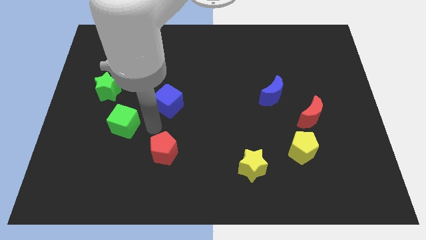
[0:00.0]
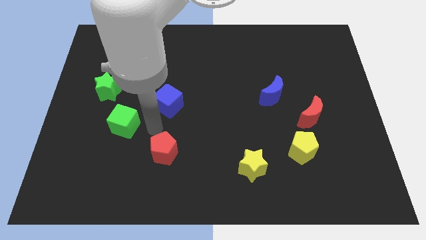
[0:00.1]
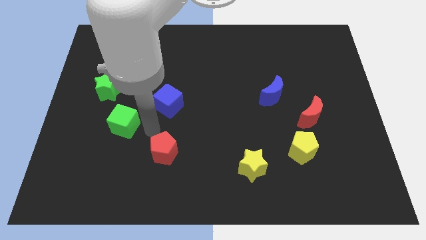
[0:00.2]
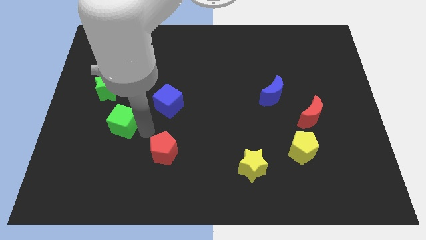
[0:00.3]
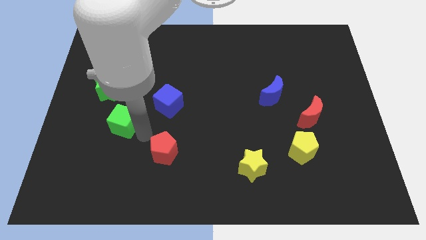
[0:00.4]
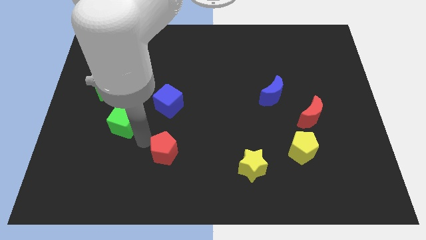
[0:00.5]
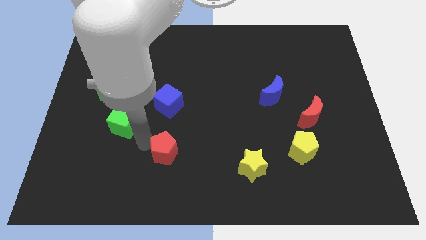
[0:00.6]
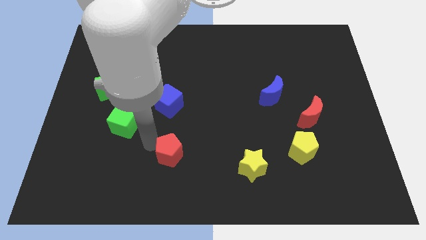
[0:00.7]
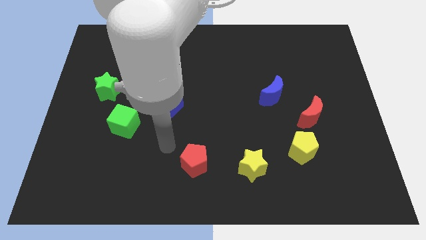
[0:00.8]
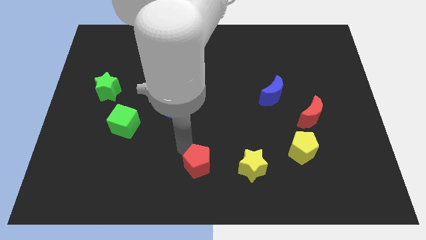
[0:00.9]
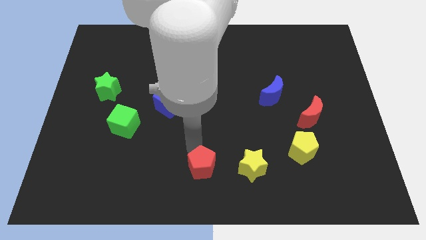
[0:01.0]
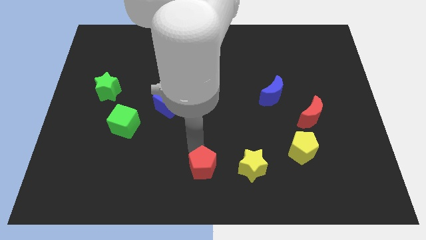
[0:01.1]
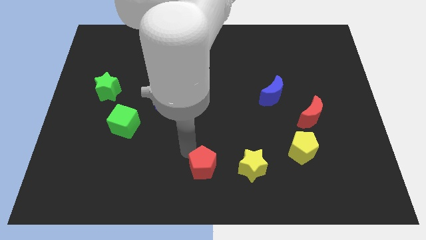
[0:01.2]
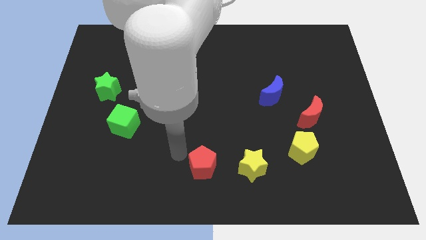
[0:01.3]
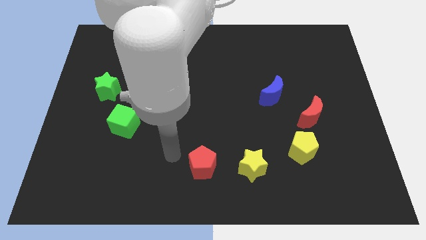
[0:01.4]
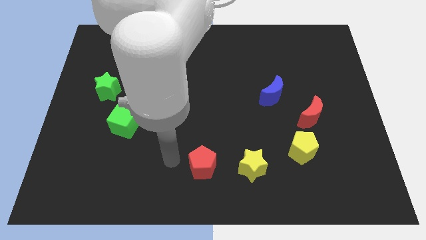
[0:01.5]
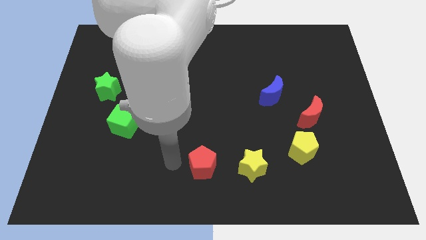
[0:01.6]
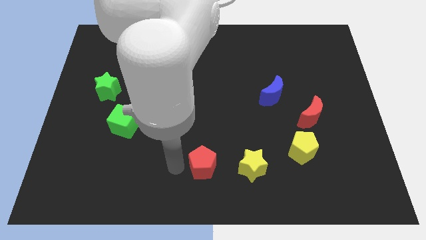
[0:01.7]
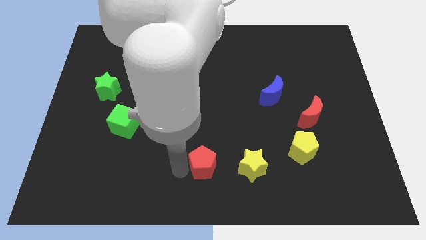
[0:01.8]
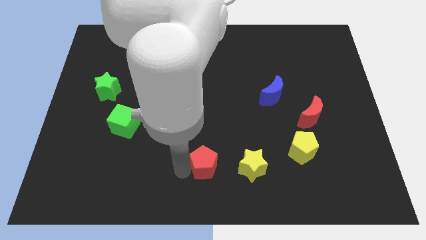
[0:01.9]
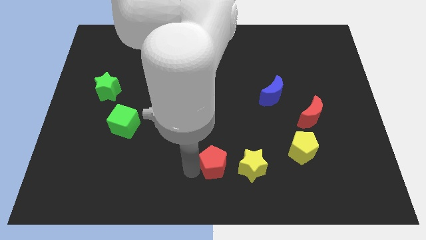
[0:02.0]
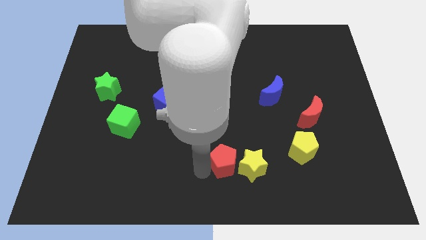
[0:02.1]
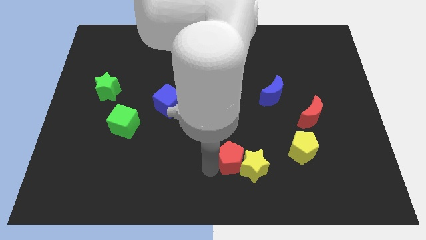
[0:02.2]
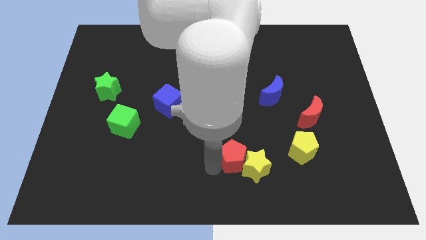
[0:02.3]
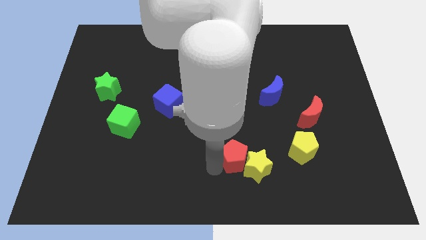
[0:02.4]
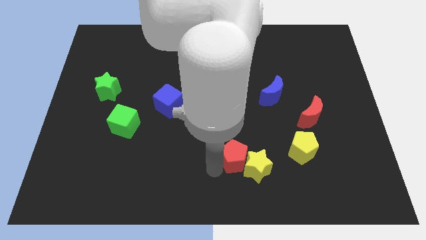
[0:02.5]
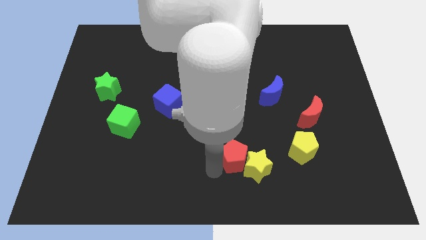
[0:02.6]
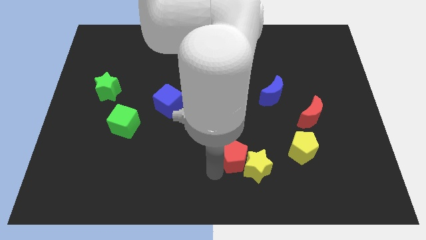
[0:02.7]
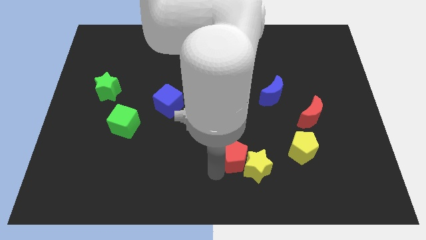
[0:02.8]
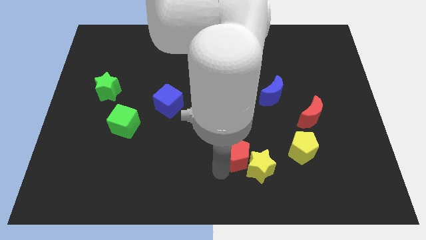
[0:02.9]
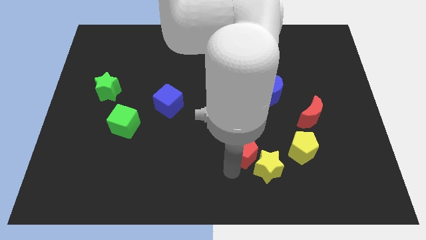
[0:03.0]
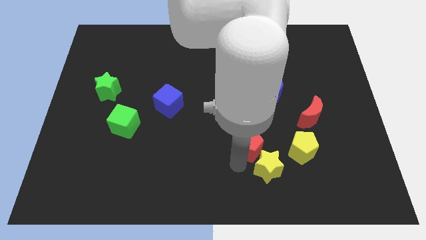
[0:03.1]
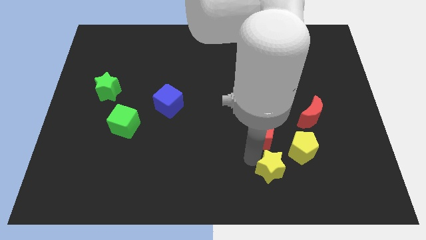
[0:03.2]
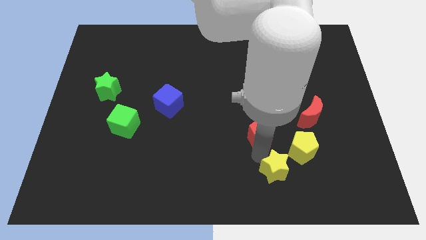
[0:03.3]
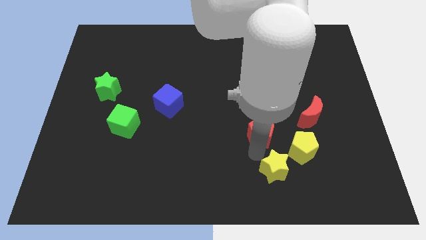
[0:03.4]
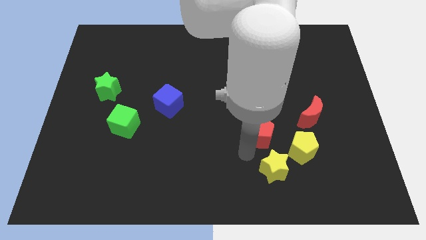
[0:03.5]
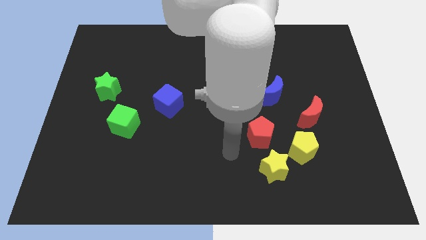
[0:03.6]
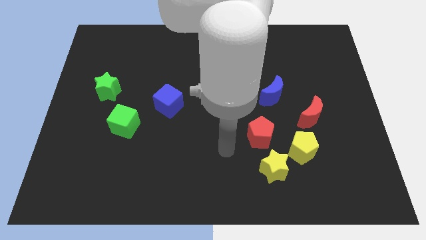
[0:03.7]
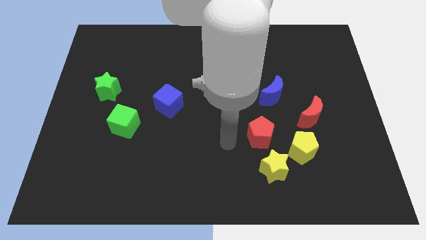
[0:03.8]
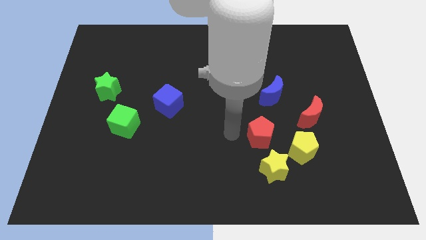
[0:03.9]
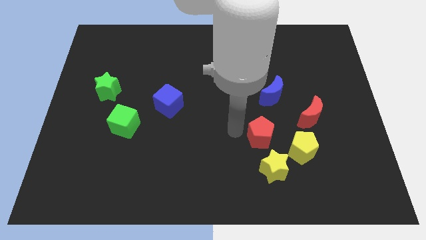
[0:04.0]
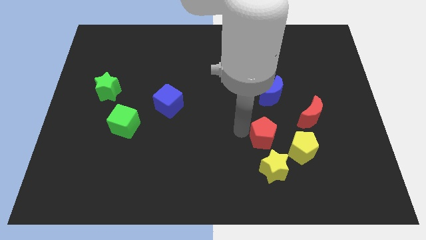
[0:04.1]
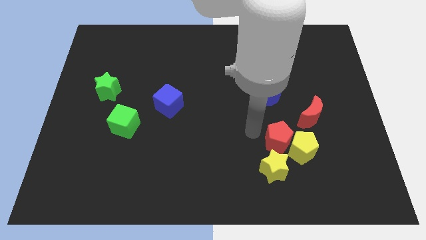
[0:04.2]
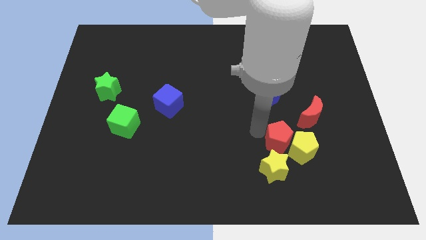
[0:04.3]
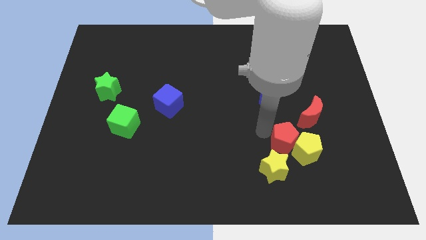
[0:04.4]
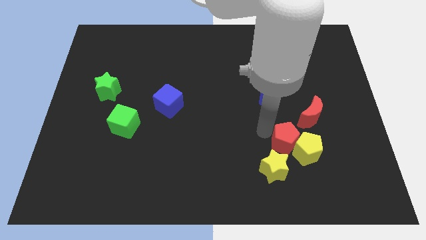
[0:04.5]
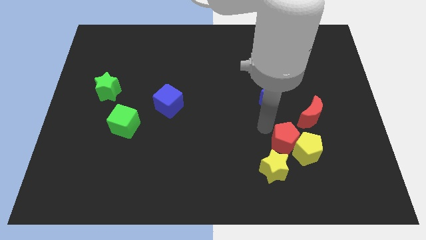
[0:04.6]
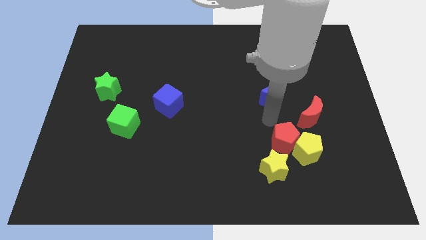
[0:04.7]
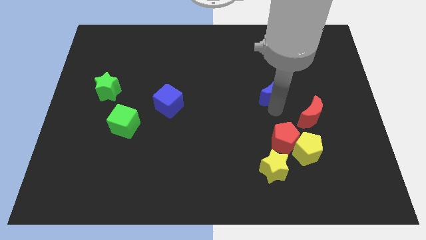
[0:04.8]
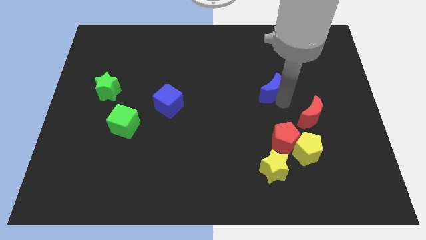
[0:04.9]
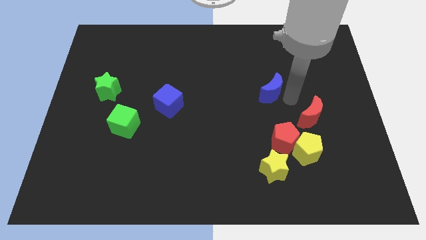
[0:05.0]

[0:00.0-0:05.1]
push the red pentagon into the yellow star

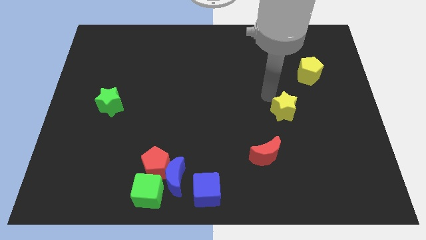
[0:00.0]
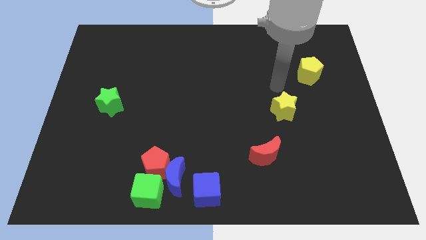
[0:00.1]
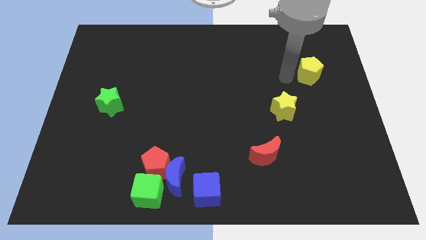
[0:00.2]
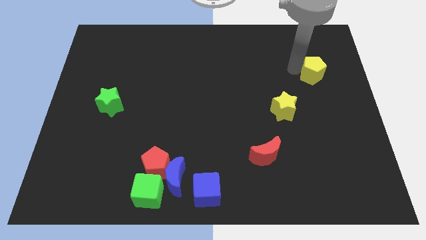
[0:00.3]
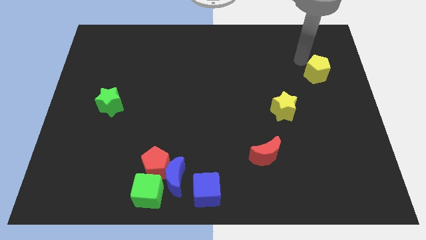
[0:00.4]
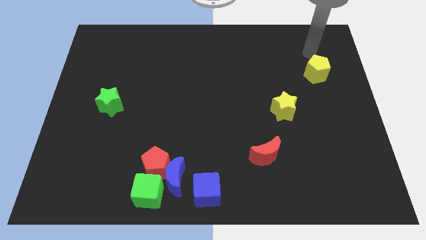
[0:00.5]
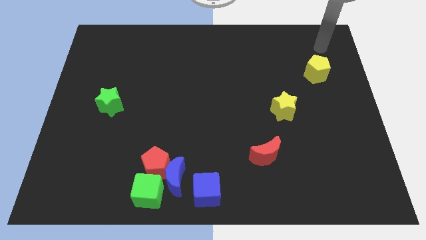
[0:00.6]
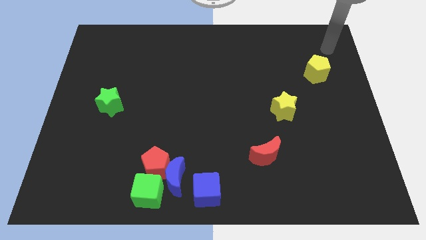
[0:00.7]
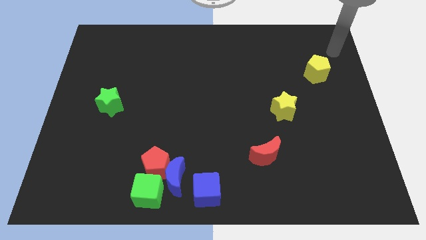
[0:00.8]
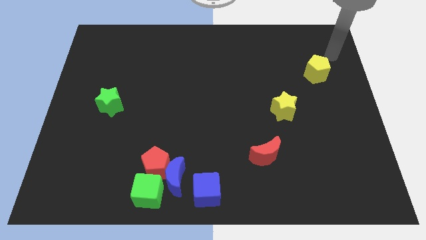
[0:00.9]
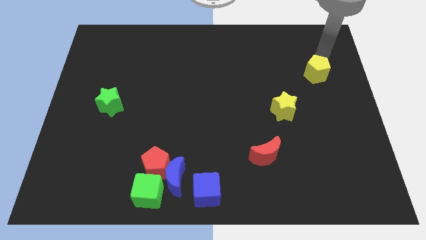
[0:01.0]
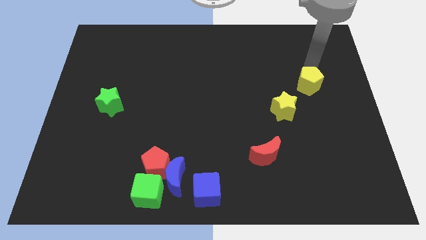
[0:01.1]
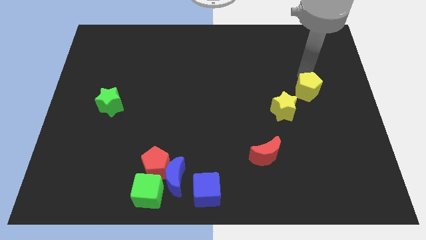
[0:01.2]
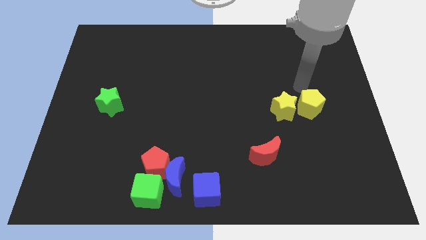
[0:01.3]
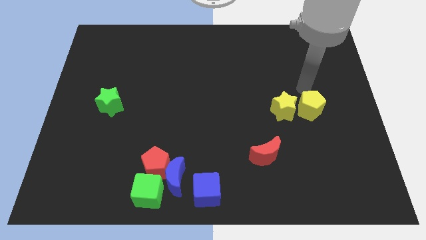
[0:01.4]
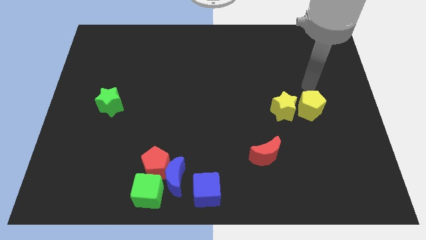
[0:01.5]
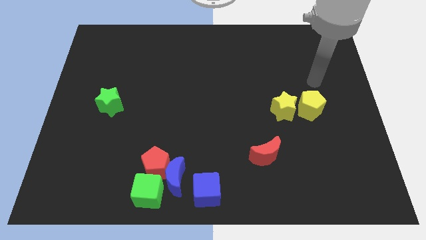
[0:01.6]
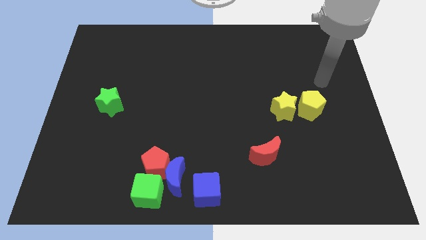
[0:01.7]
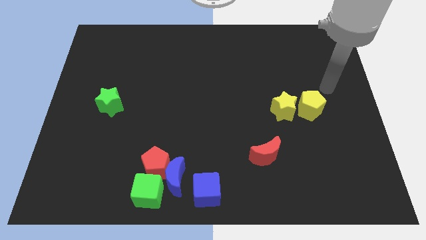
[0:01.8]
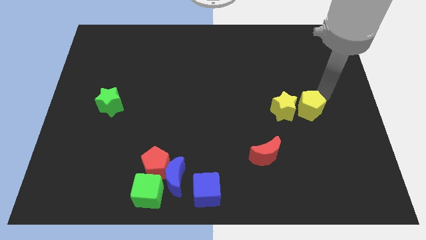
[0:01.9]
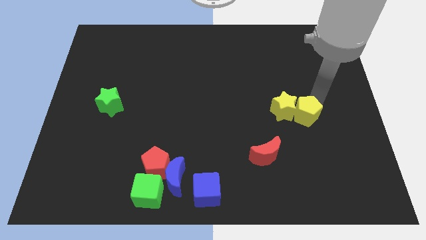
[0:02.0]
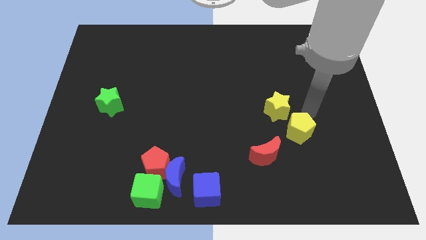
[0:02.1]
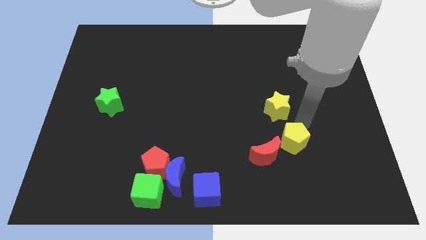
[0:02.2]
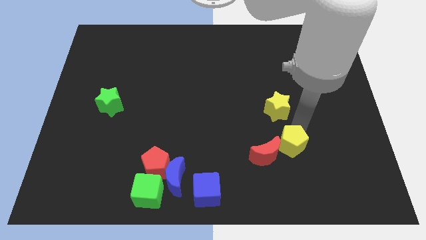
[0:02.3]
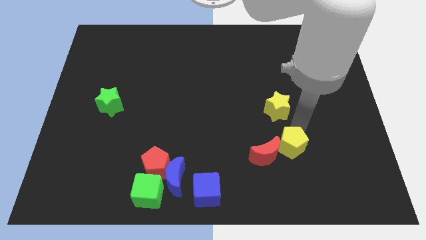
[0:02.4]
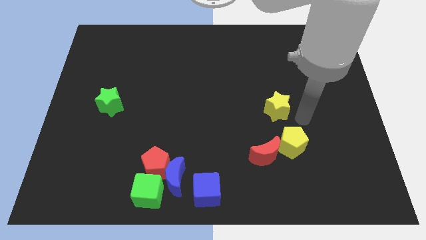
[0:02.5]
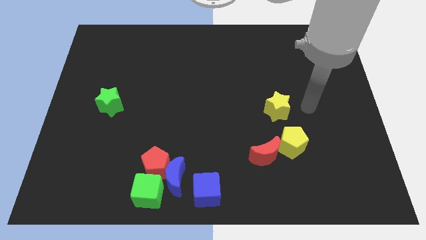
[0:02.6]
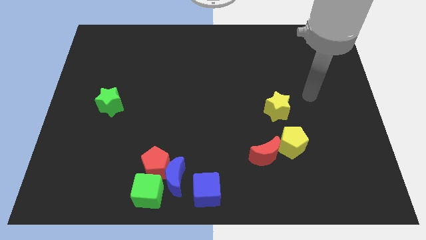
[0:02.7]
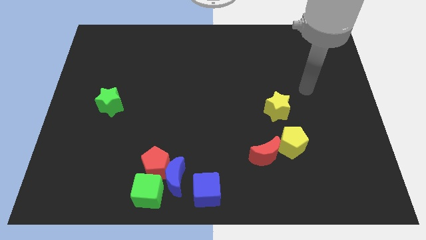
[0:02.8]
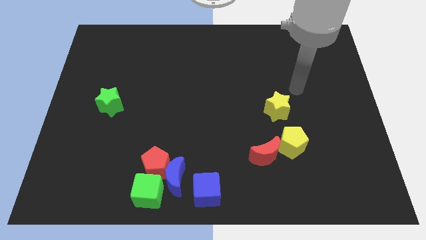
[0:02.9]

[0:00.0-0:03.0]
move the yellow pentagon top right to red moon

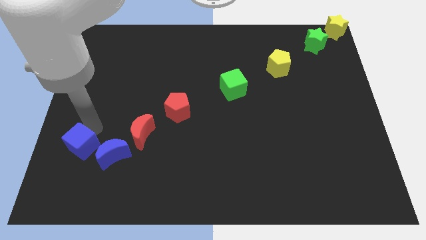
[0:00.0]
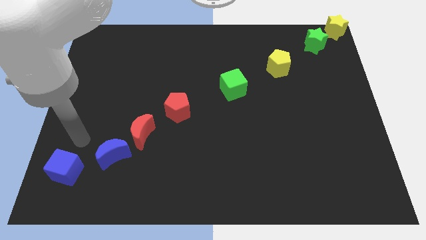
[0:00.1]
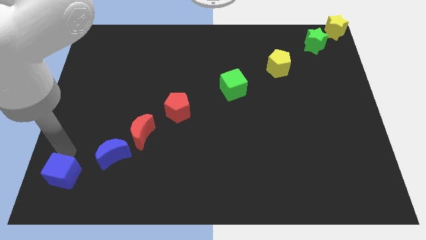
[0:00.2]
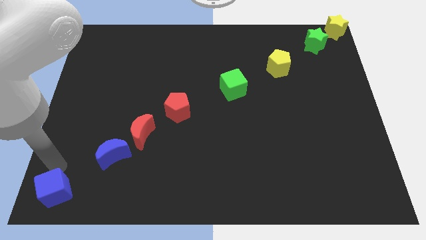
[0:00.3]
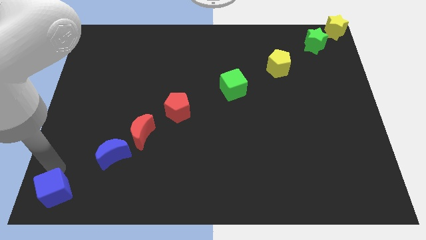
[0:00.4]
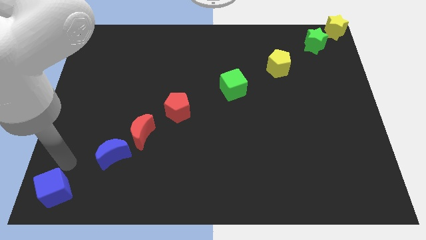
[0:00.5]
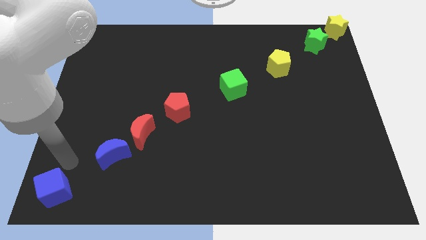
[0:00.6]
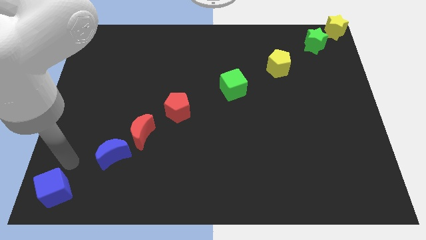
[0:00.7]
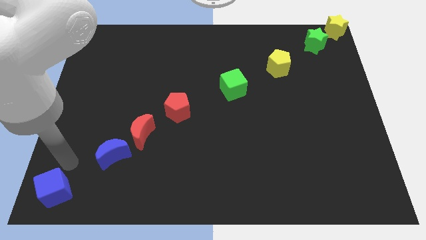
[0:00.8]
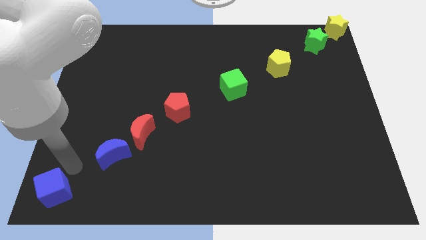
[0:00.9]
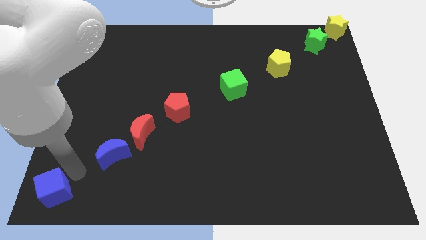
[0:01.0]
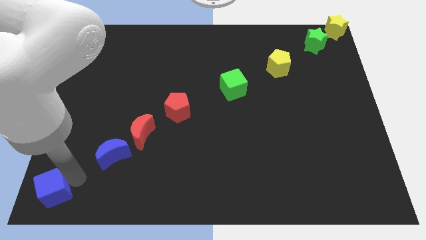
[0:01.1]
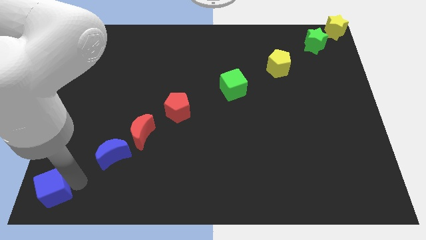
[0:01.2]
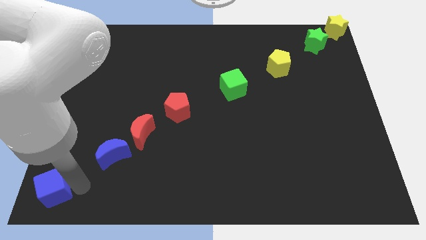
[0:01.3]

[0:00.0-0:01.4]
push the blue cube to the bottom left to the board
